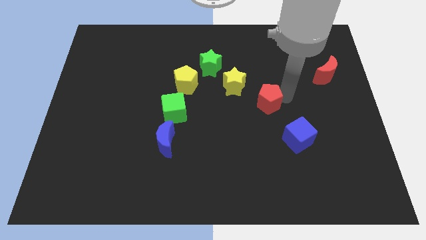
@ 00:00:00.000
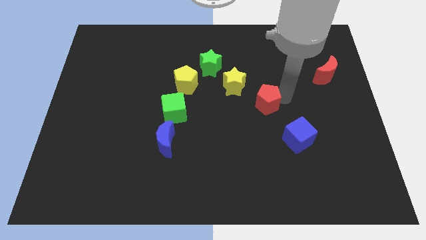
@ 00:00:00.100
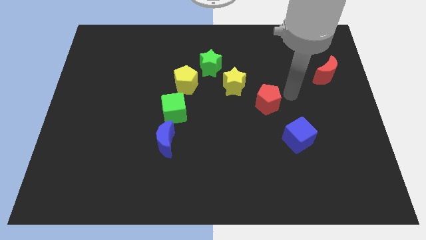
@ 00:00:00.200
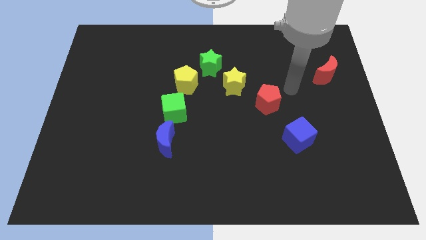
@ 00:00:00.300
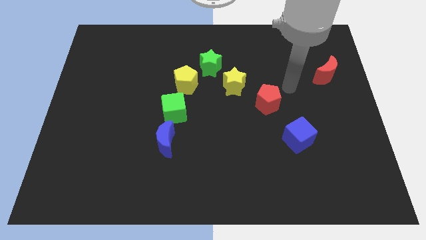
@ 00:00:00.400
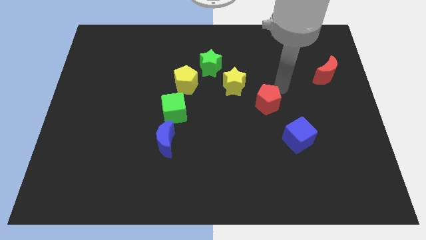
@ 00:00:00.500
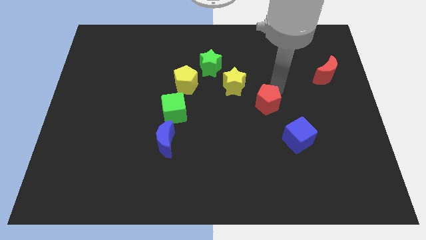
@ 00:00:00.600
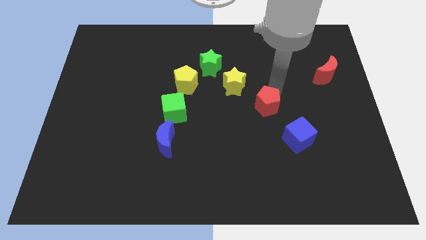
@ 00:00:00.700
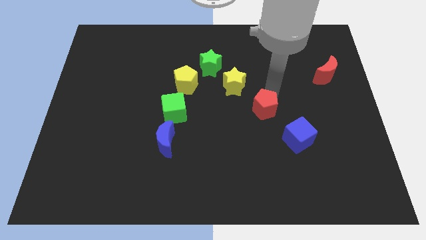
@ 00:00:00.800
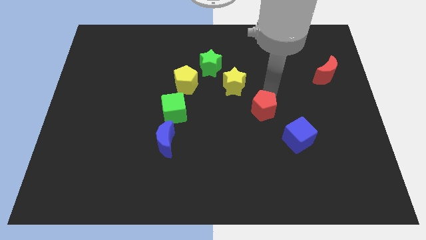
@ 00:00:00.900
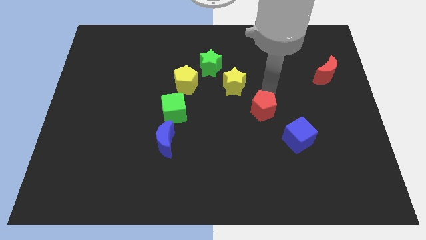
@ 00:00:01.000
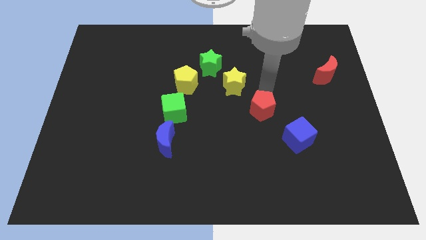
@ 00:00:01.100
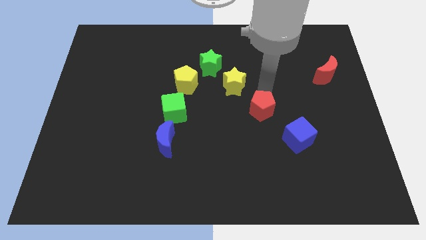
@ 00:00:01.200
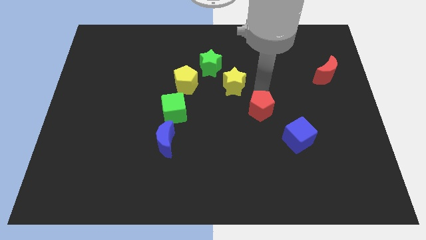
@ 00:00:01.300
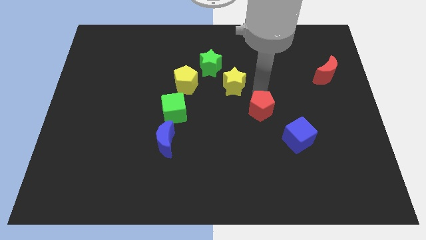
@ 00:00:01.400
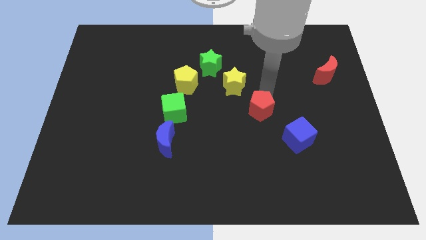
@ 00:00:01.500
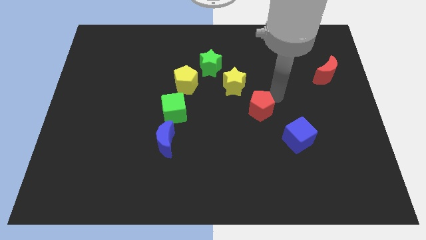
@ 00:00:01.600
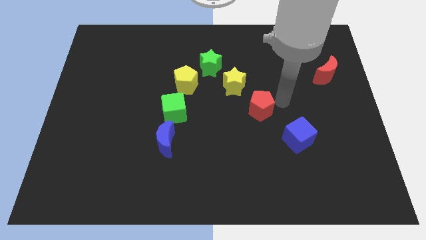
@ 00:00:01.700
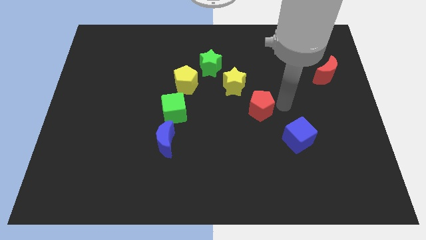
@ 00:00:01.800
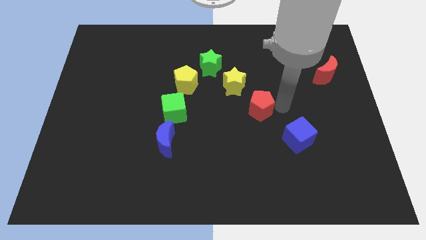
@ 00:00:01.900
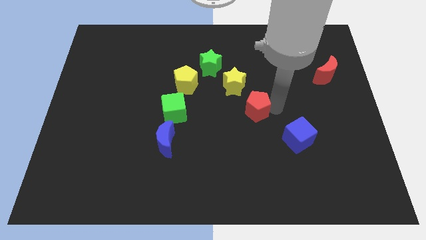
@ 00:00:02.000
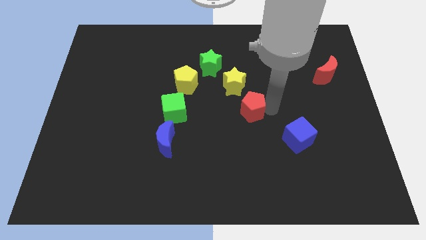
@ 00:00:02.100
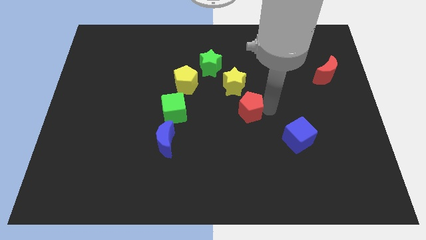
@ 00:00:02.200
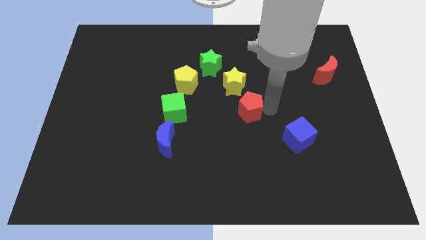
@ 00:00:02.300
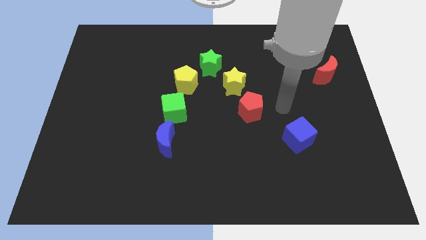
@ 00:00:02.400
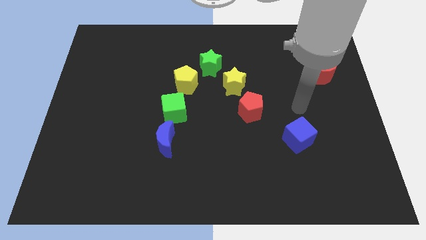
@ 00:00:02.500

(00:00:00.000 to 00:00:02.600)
place red pentagon diagonal to yellow star

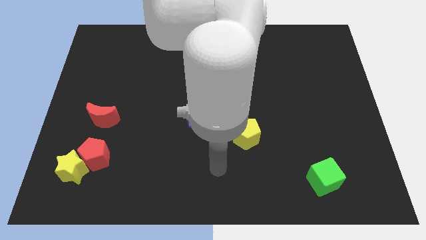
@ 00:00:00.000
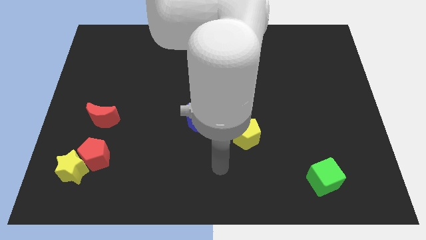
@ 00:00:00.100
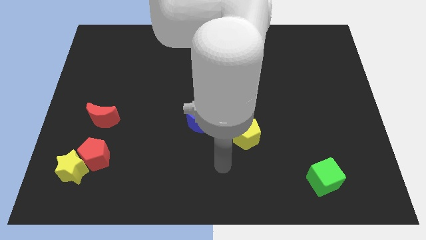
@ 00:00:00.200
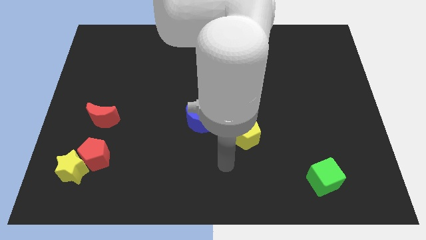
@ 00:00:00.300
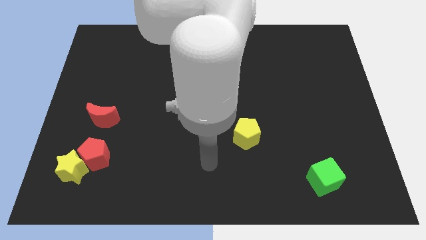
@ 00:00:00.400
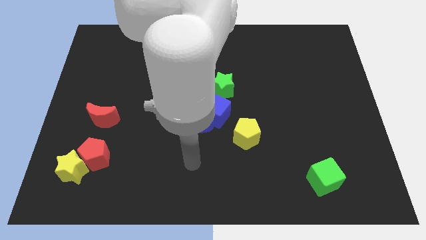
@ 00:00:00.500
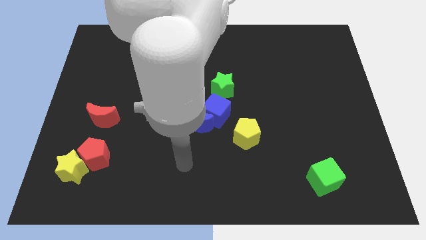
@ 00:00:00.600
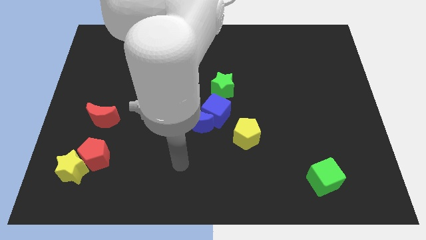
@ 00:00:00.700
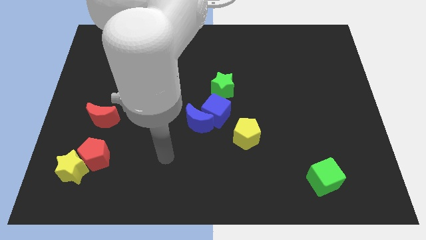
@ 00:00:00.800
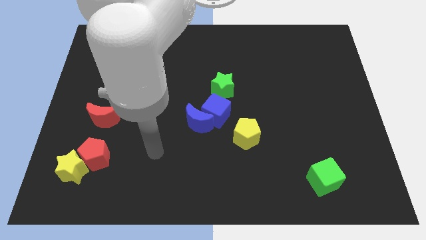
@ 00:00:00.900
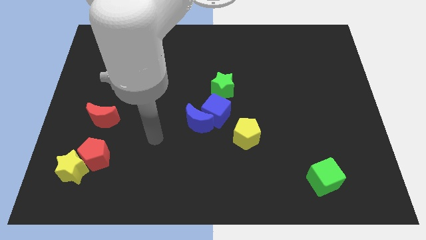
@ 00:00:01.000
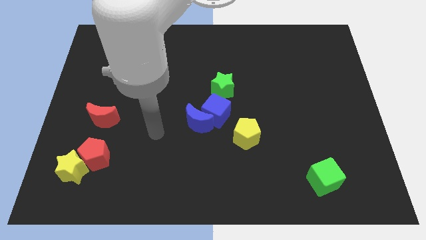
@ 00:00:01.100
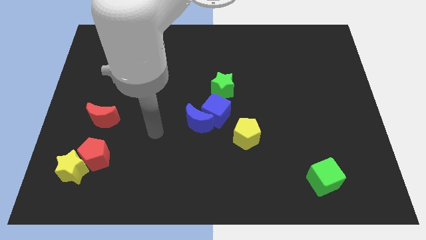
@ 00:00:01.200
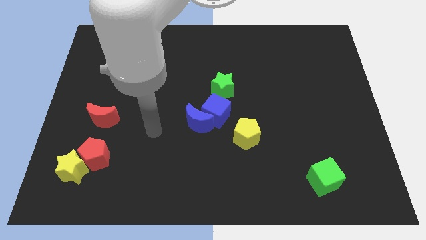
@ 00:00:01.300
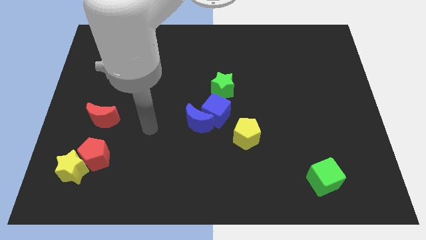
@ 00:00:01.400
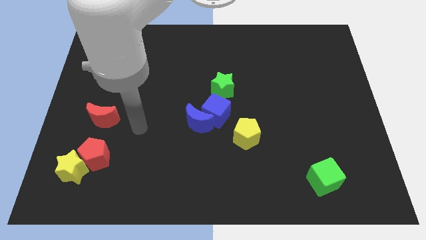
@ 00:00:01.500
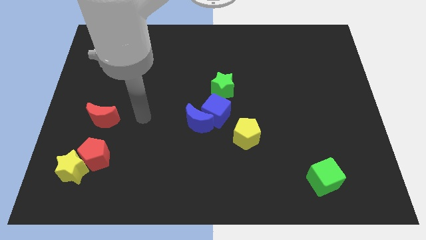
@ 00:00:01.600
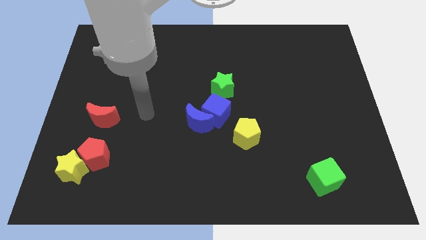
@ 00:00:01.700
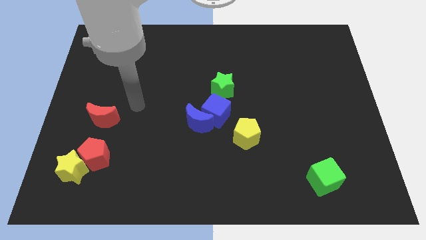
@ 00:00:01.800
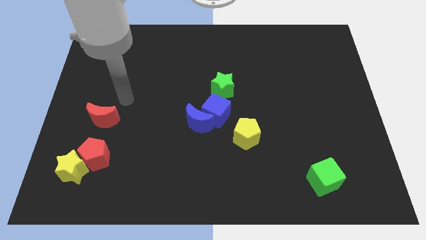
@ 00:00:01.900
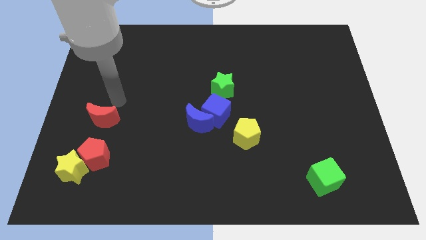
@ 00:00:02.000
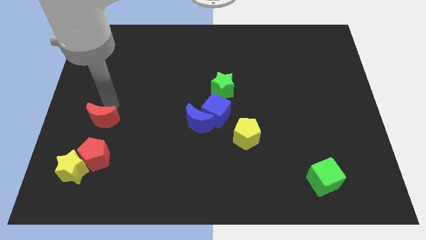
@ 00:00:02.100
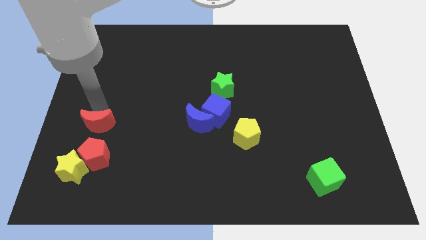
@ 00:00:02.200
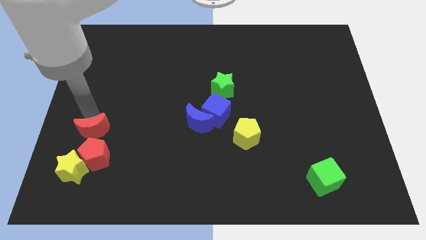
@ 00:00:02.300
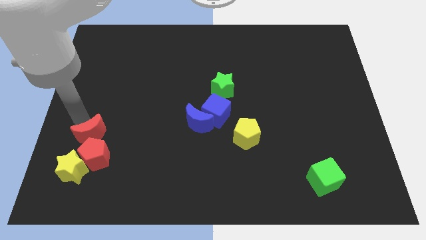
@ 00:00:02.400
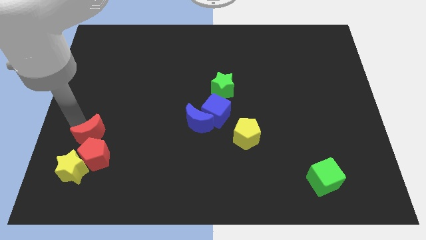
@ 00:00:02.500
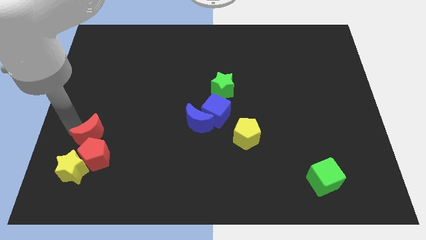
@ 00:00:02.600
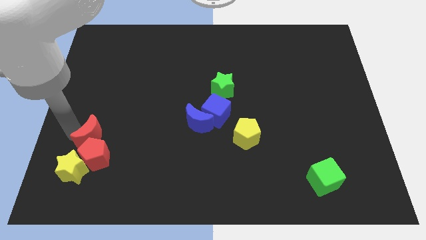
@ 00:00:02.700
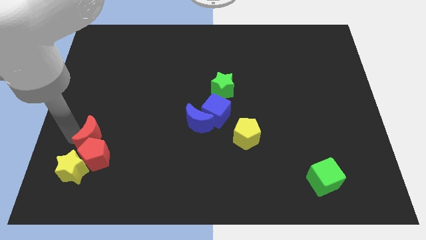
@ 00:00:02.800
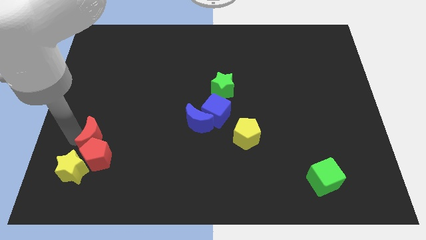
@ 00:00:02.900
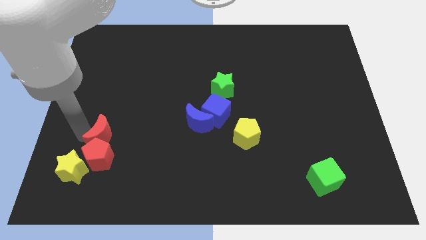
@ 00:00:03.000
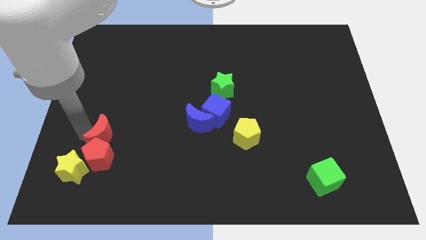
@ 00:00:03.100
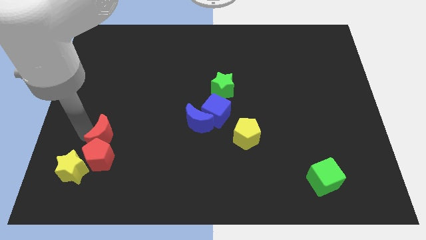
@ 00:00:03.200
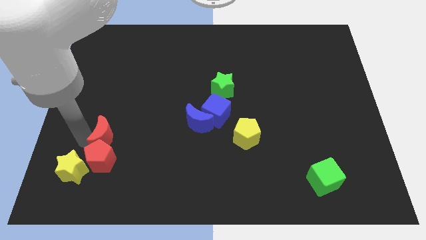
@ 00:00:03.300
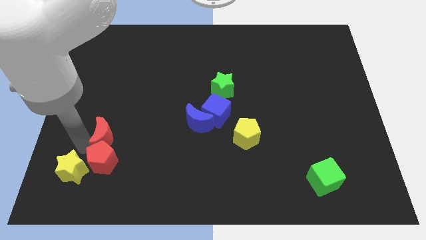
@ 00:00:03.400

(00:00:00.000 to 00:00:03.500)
sightly move the red moon to the top of red pentagon

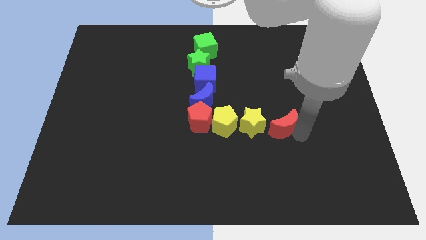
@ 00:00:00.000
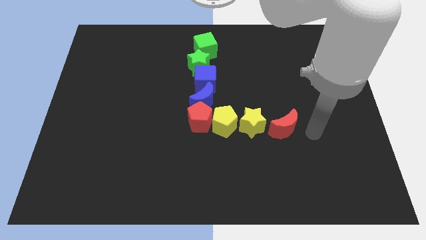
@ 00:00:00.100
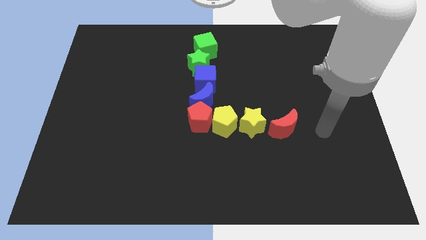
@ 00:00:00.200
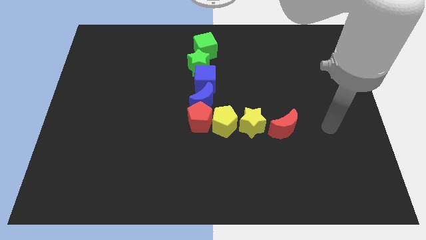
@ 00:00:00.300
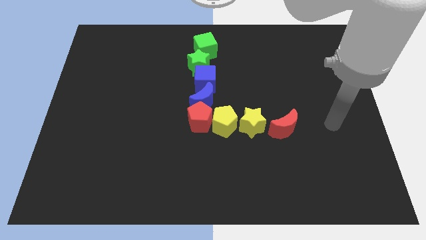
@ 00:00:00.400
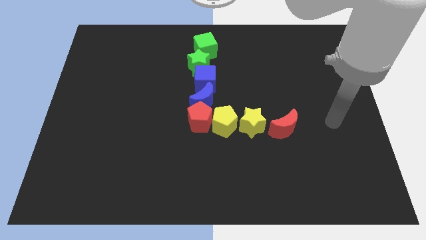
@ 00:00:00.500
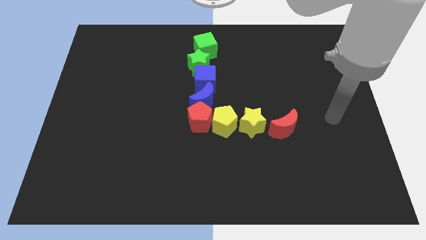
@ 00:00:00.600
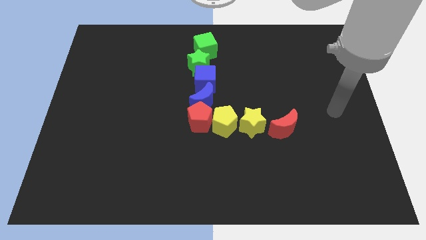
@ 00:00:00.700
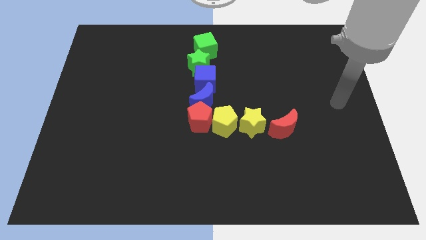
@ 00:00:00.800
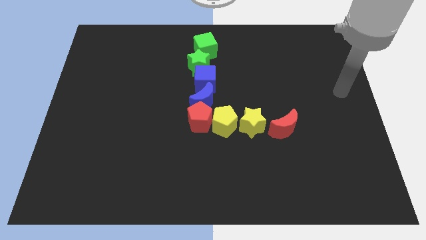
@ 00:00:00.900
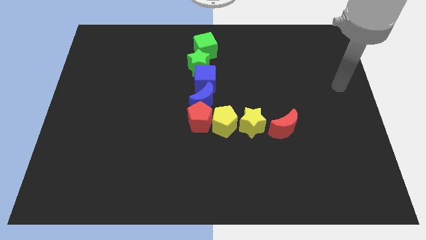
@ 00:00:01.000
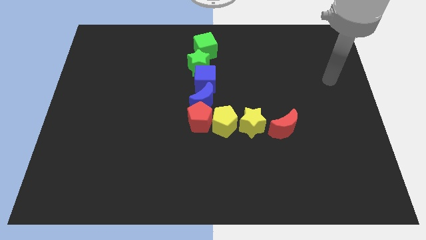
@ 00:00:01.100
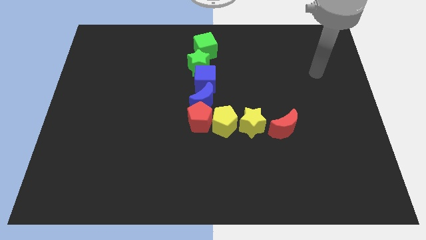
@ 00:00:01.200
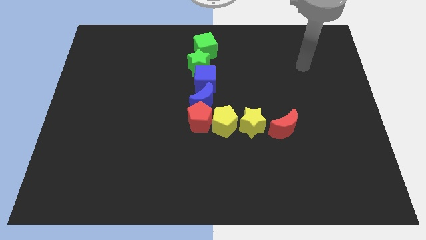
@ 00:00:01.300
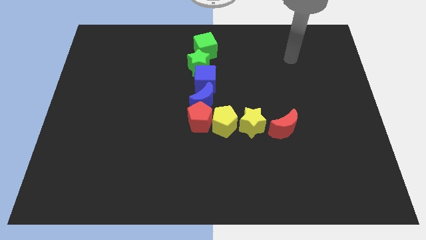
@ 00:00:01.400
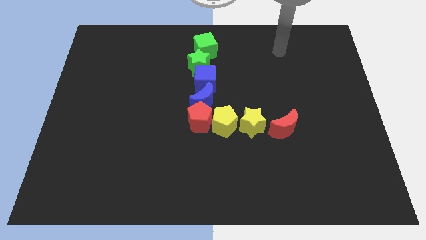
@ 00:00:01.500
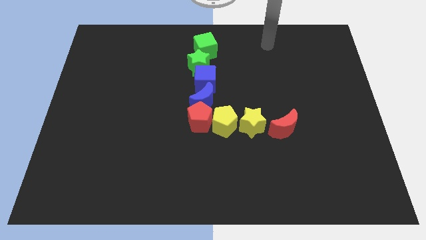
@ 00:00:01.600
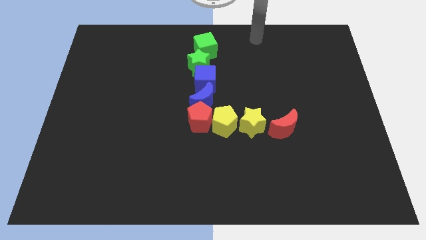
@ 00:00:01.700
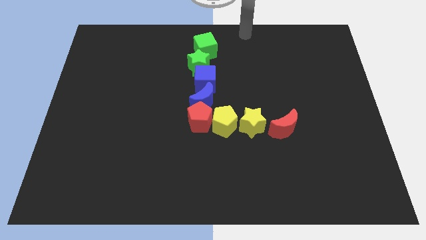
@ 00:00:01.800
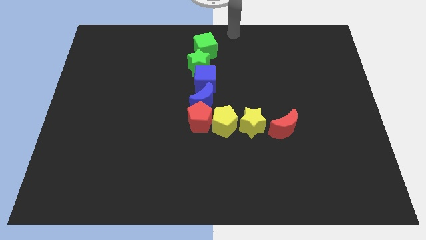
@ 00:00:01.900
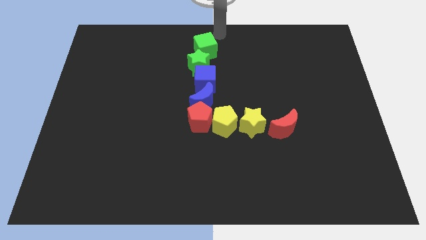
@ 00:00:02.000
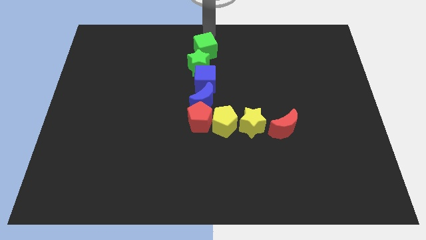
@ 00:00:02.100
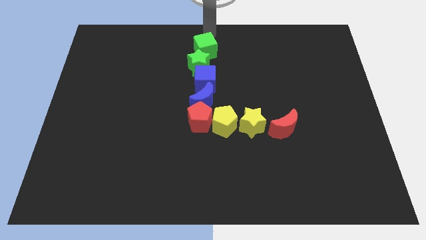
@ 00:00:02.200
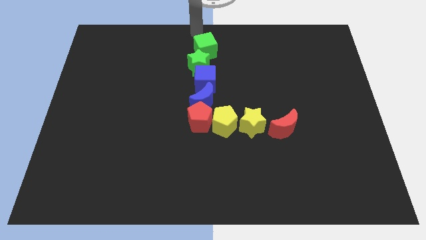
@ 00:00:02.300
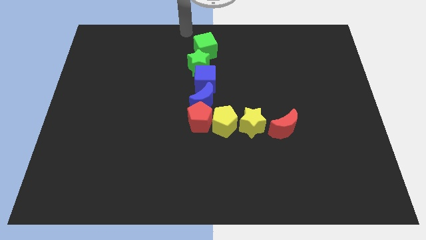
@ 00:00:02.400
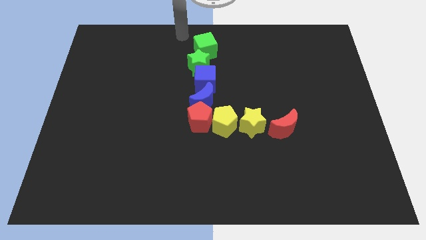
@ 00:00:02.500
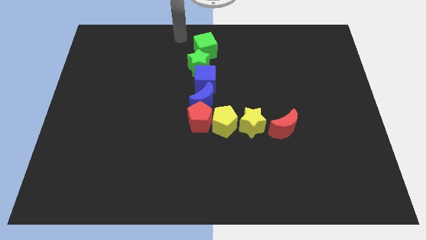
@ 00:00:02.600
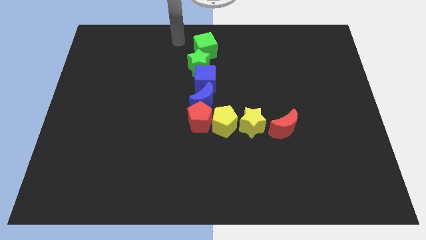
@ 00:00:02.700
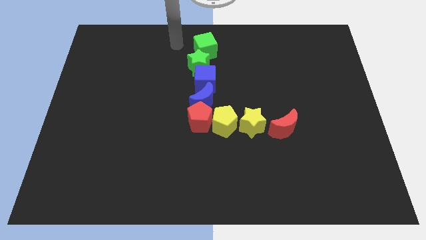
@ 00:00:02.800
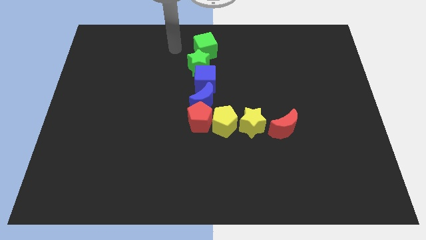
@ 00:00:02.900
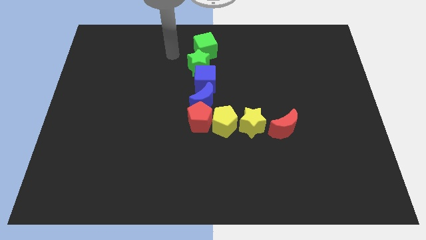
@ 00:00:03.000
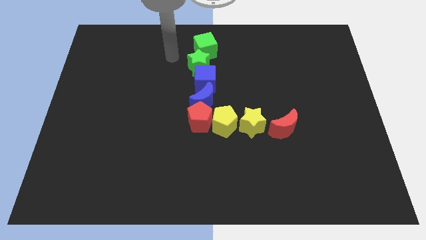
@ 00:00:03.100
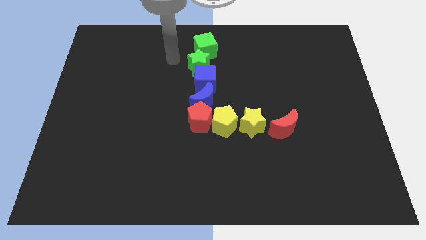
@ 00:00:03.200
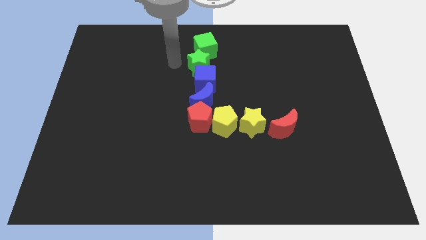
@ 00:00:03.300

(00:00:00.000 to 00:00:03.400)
move your arm away from the red moon
